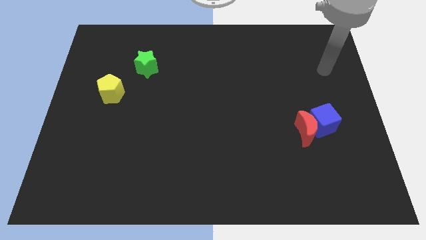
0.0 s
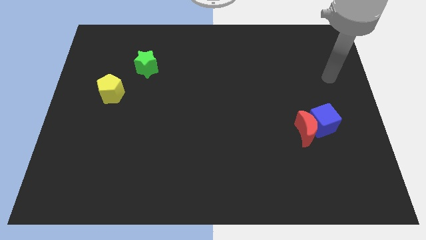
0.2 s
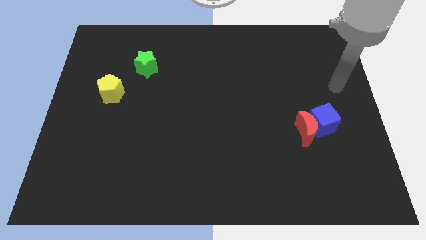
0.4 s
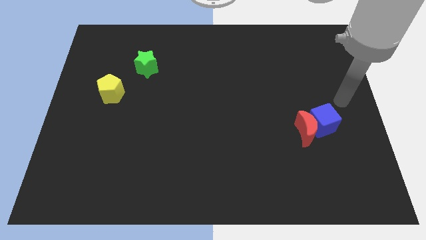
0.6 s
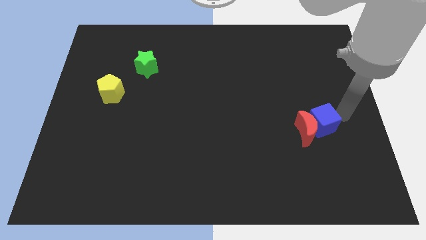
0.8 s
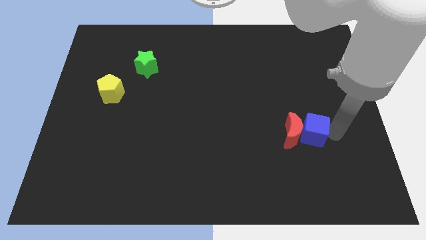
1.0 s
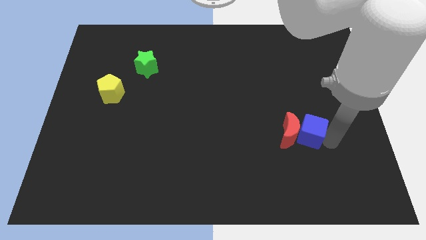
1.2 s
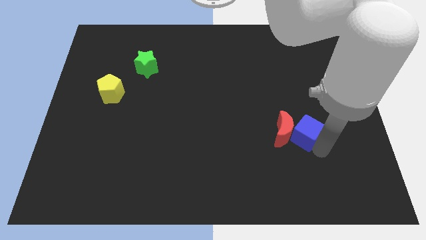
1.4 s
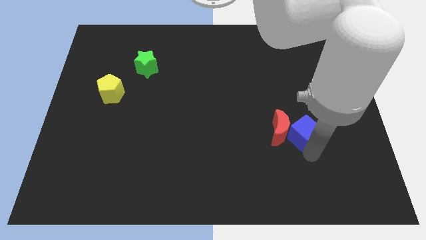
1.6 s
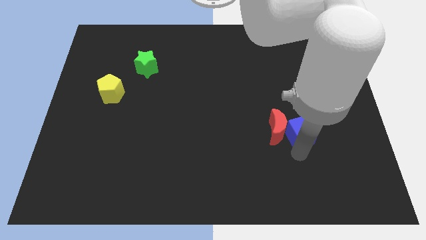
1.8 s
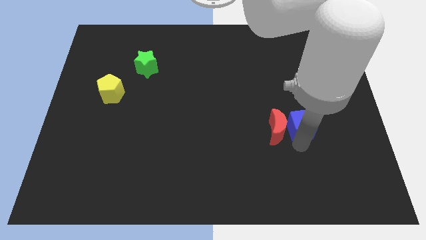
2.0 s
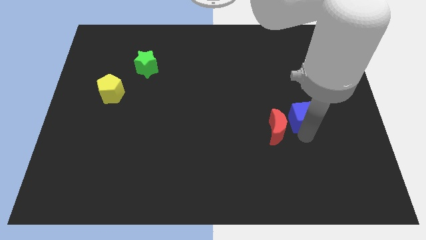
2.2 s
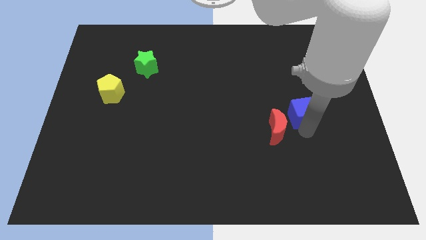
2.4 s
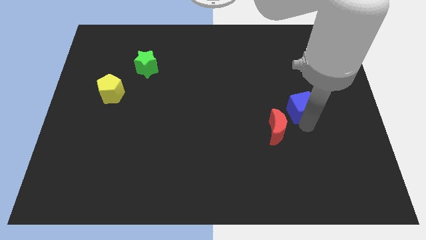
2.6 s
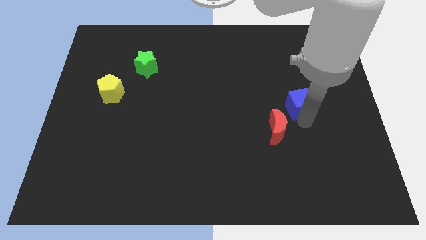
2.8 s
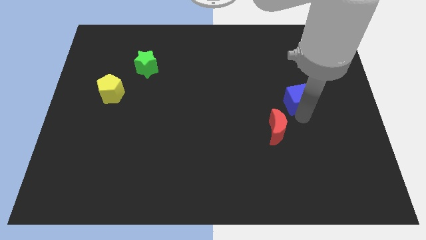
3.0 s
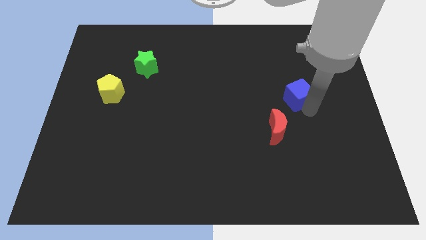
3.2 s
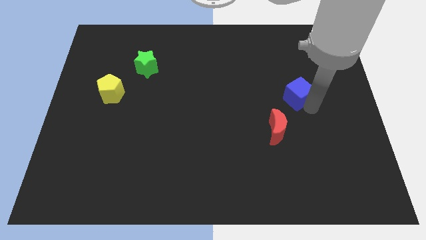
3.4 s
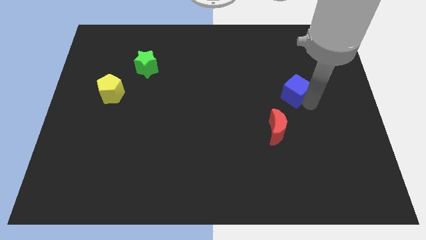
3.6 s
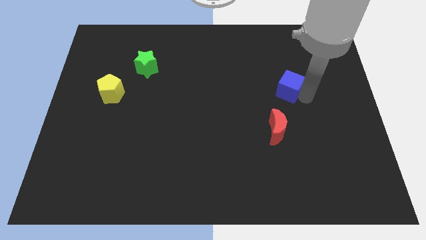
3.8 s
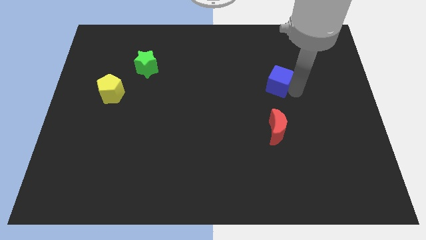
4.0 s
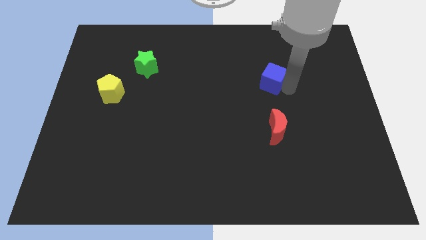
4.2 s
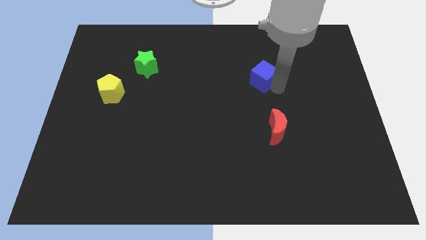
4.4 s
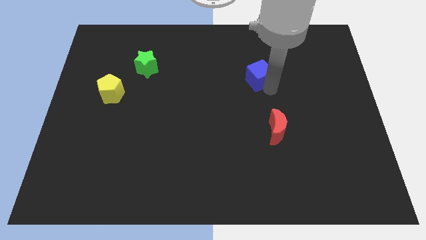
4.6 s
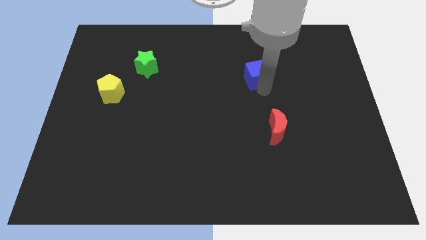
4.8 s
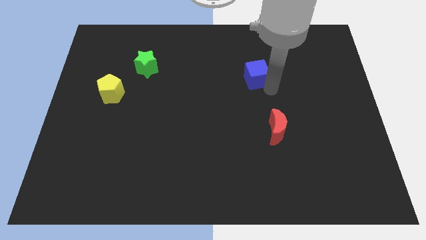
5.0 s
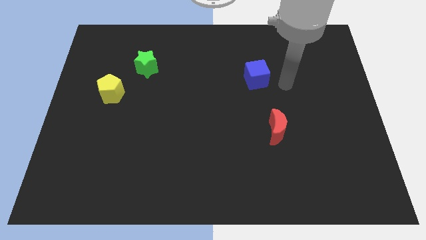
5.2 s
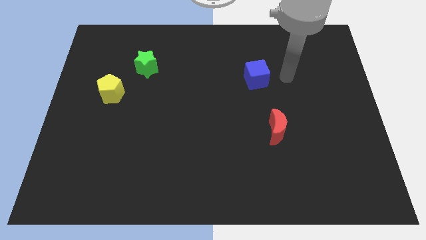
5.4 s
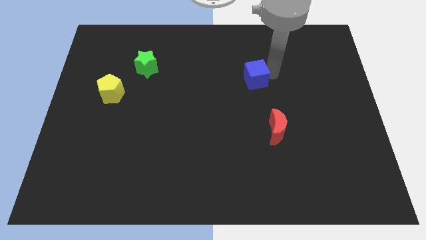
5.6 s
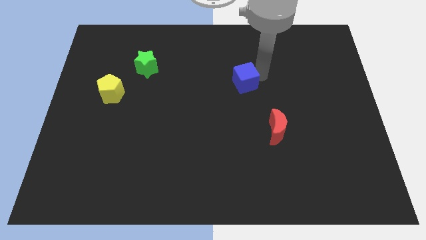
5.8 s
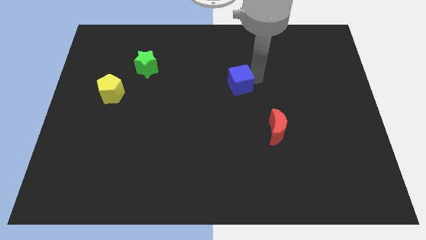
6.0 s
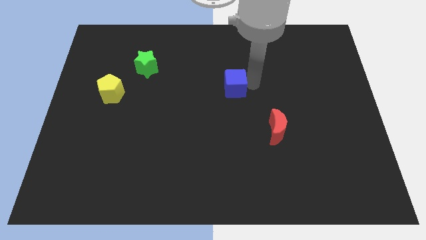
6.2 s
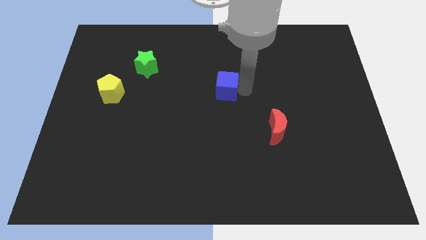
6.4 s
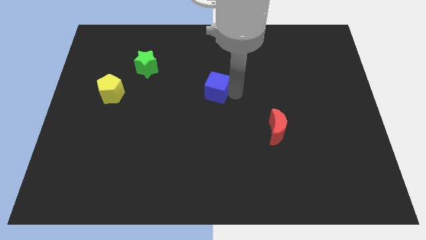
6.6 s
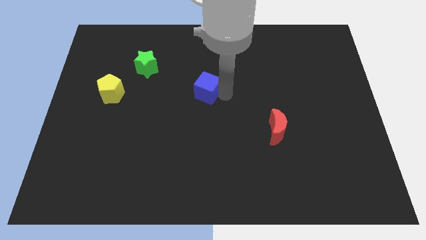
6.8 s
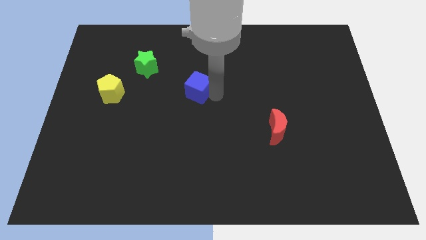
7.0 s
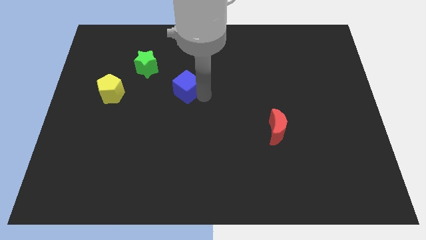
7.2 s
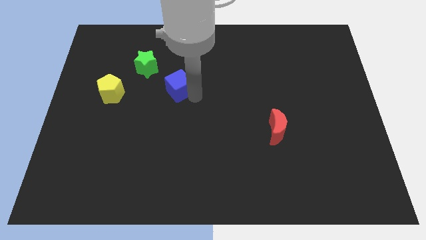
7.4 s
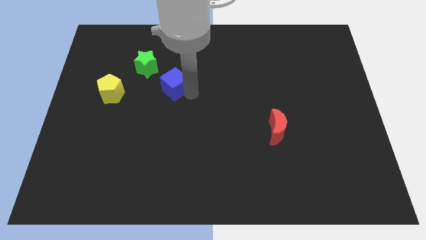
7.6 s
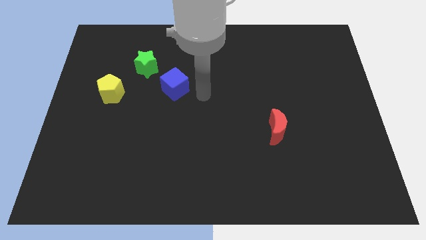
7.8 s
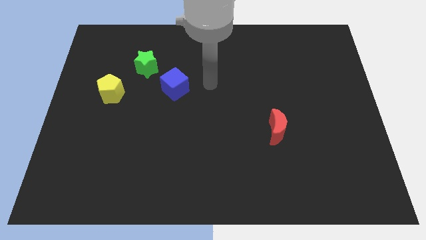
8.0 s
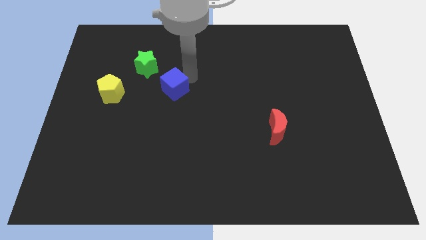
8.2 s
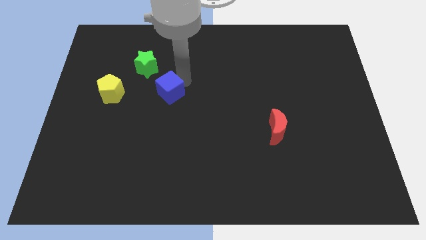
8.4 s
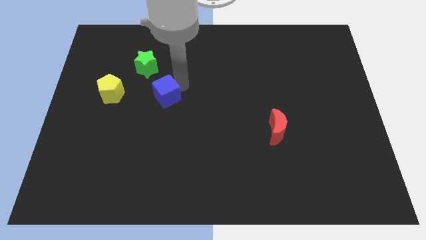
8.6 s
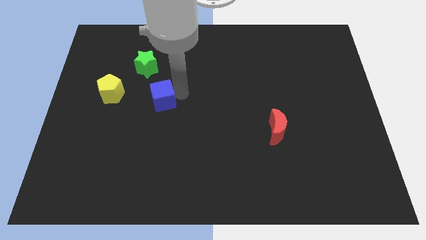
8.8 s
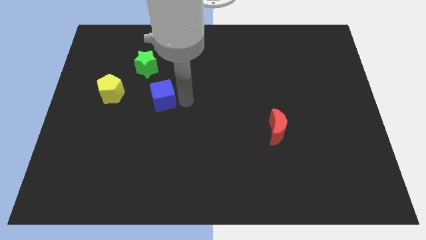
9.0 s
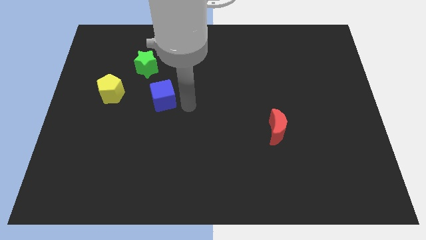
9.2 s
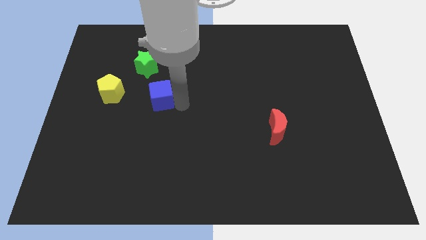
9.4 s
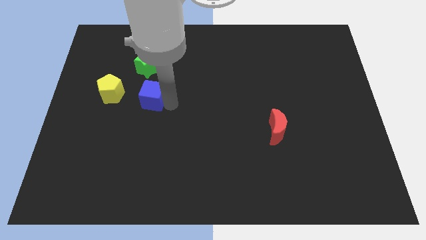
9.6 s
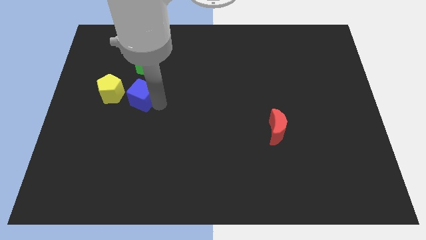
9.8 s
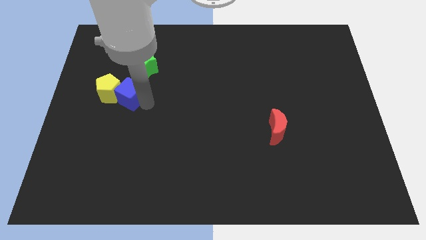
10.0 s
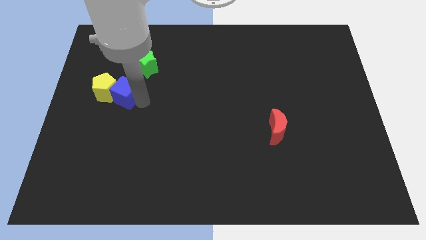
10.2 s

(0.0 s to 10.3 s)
put the blue block towards the yellow block

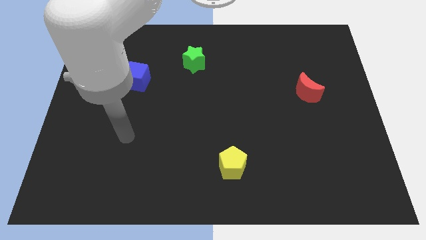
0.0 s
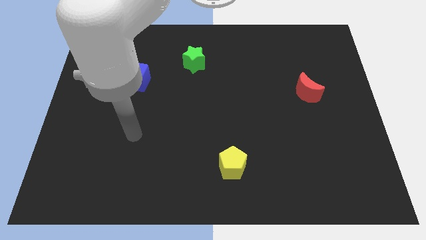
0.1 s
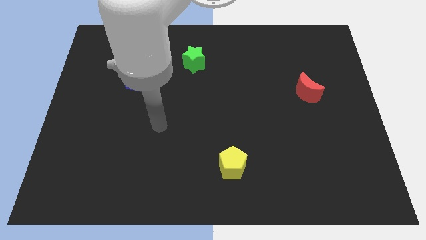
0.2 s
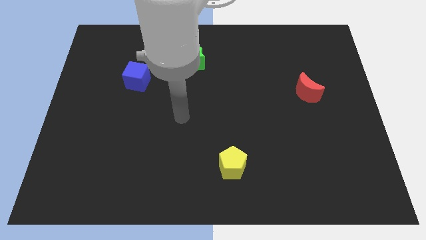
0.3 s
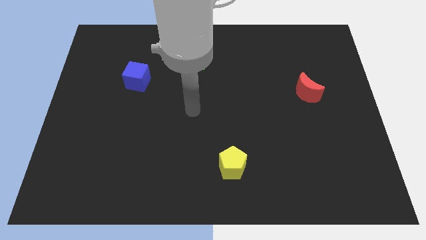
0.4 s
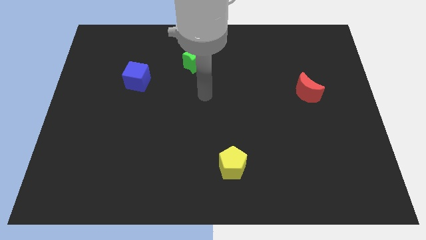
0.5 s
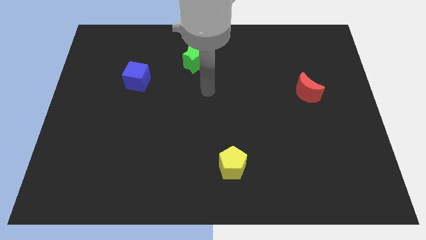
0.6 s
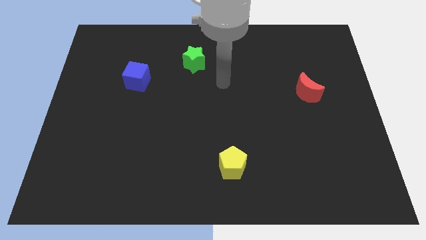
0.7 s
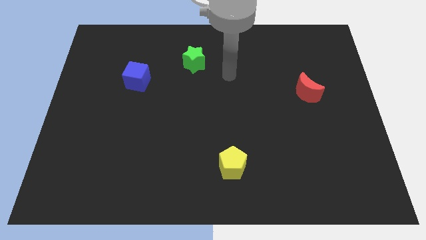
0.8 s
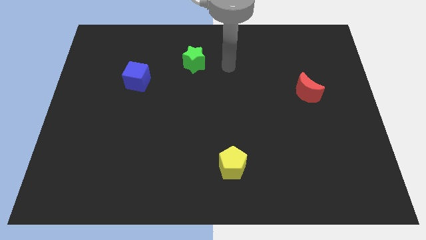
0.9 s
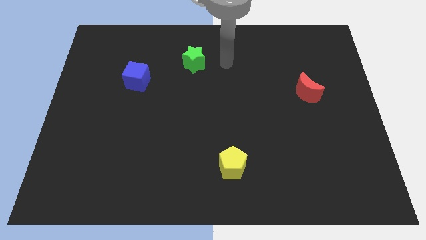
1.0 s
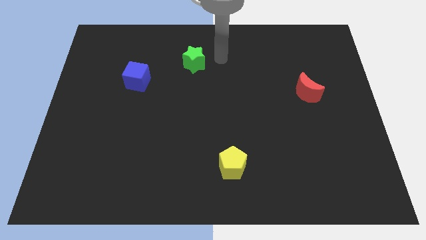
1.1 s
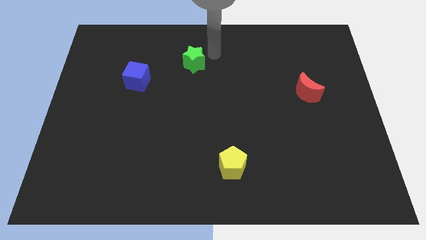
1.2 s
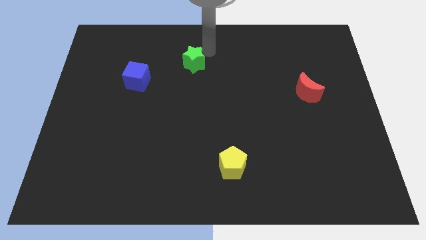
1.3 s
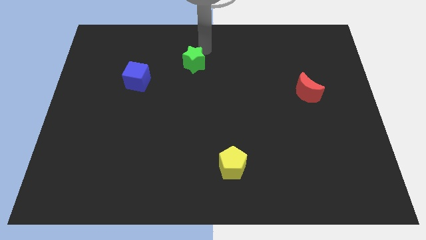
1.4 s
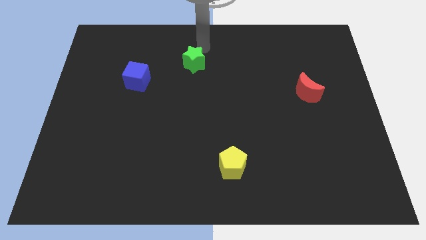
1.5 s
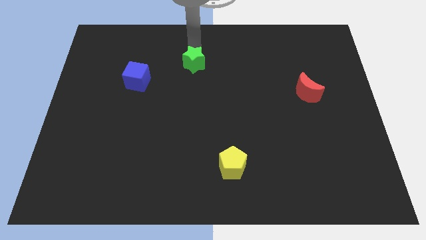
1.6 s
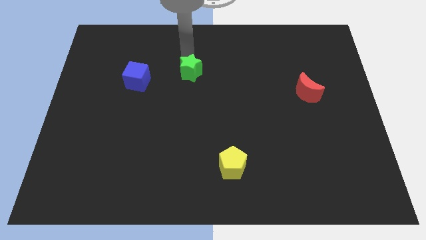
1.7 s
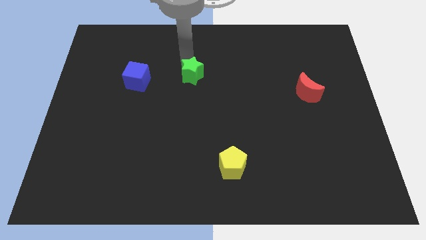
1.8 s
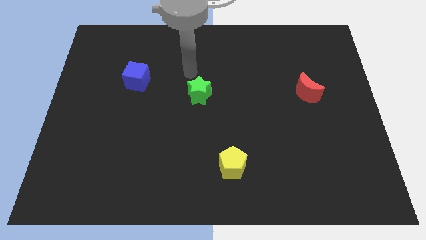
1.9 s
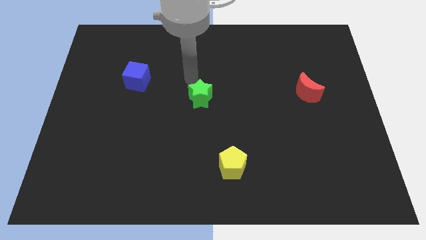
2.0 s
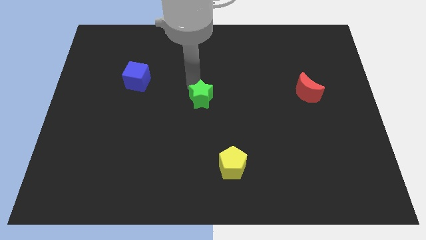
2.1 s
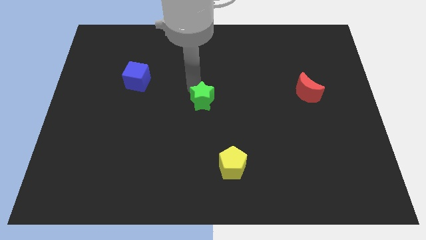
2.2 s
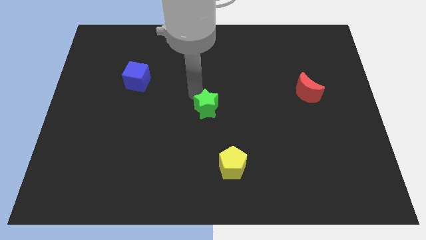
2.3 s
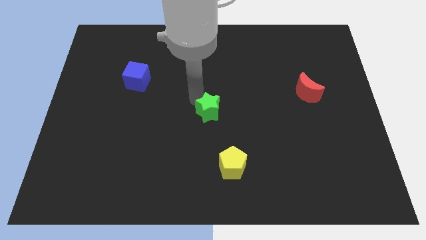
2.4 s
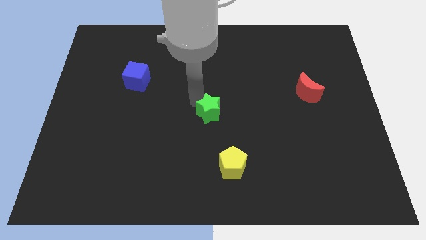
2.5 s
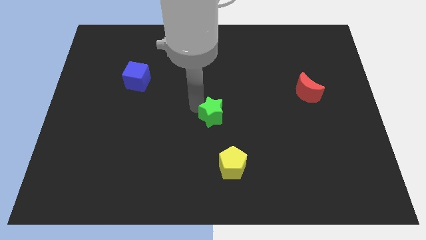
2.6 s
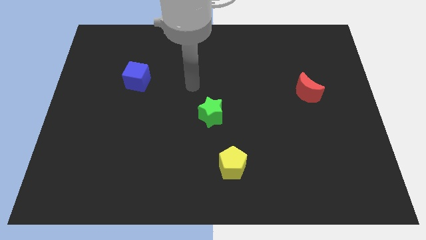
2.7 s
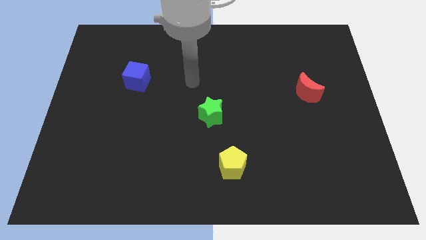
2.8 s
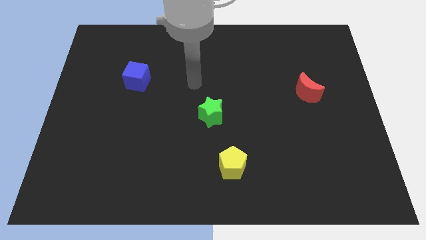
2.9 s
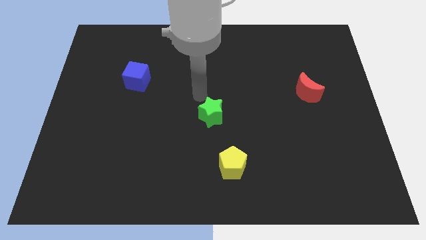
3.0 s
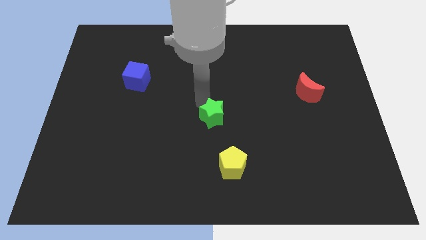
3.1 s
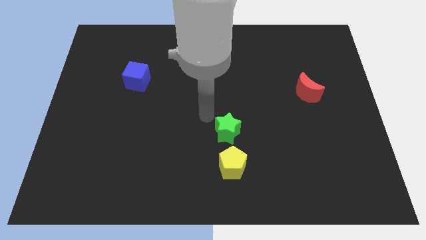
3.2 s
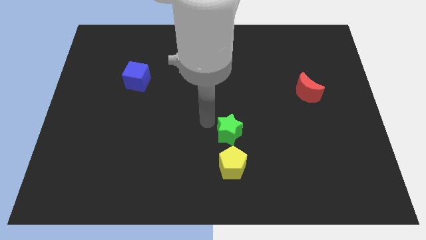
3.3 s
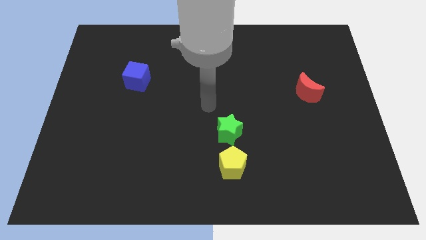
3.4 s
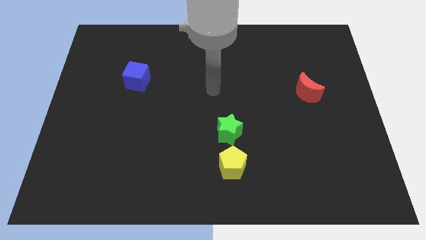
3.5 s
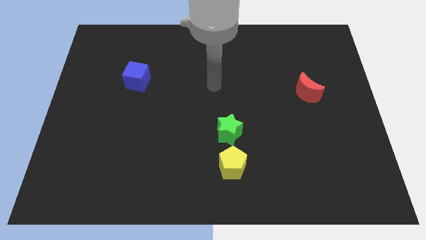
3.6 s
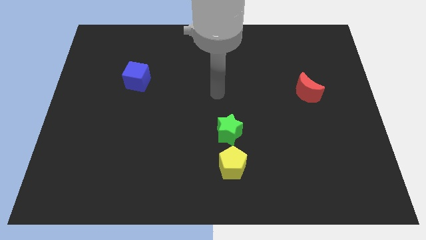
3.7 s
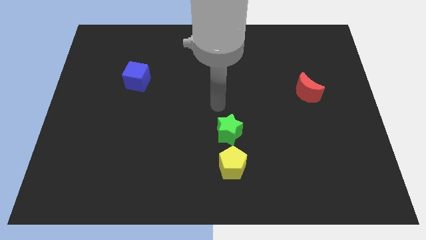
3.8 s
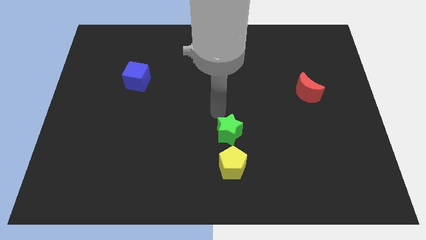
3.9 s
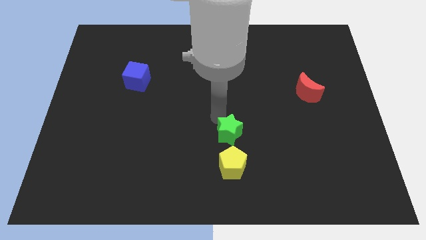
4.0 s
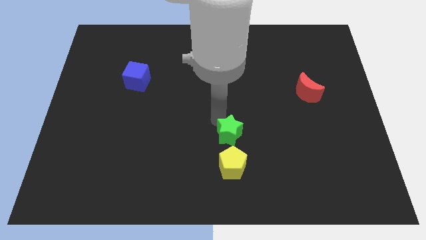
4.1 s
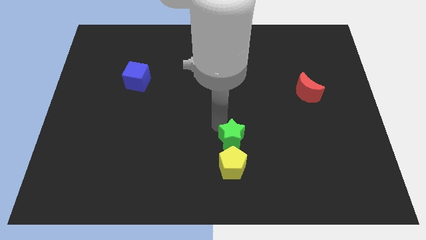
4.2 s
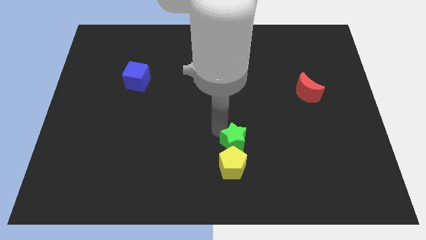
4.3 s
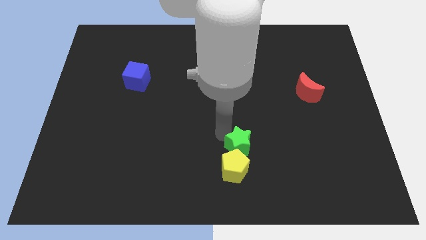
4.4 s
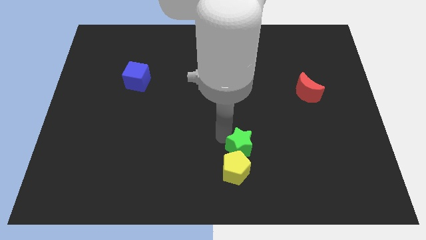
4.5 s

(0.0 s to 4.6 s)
slide the star next to the yellow block
